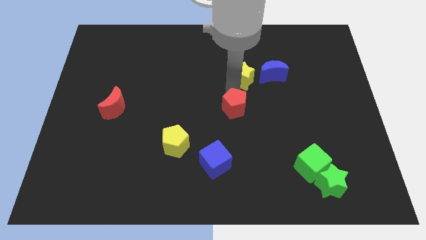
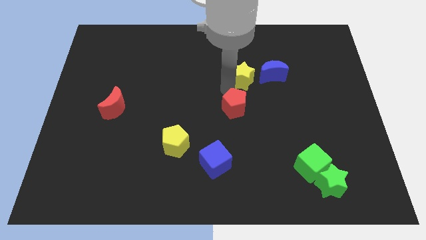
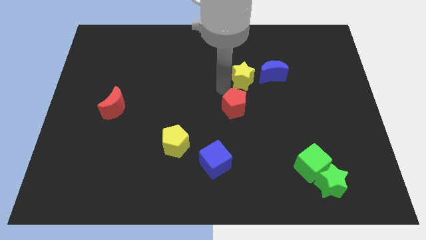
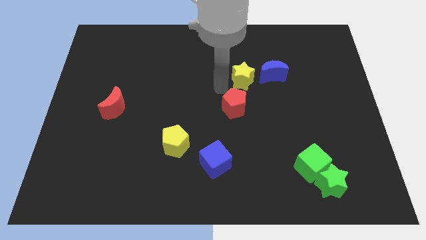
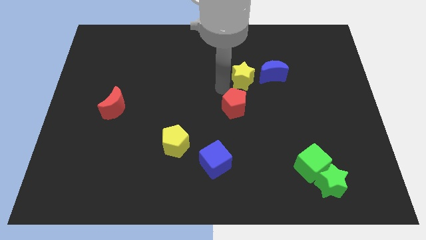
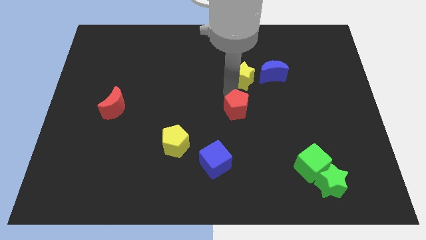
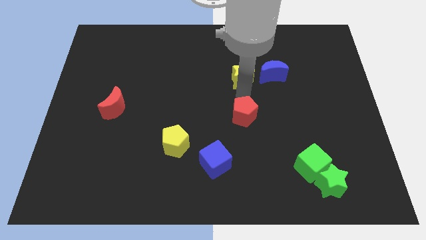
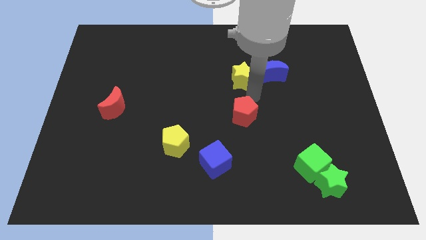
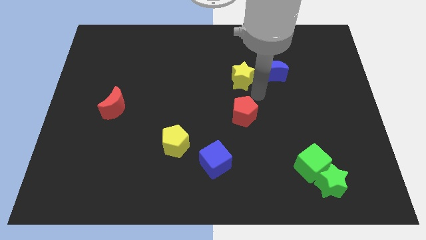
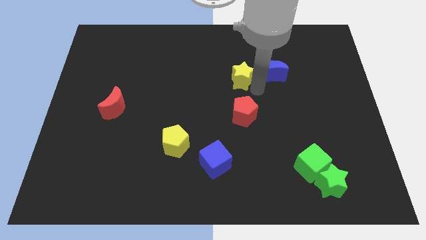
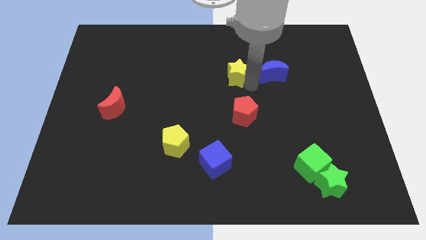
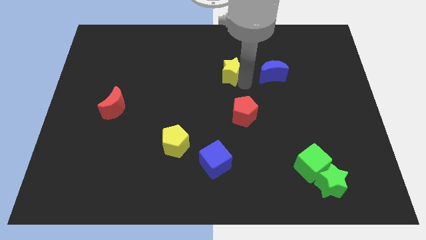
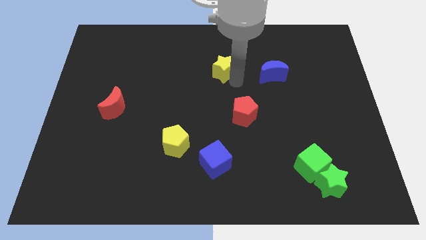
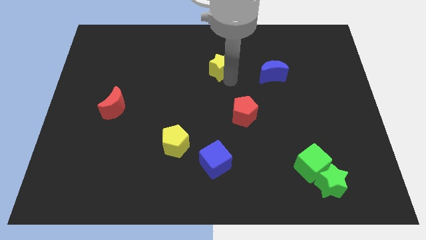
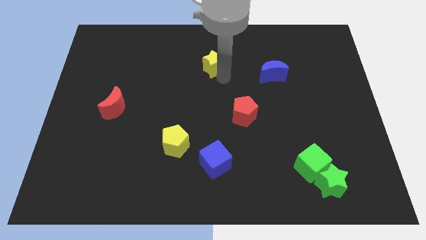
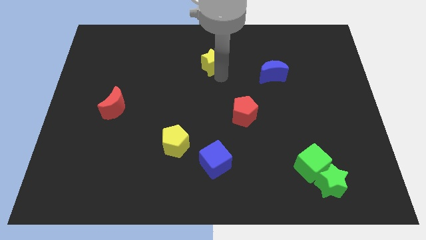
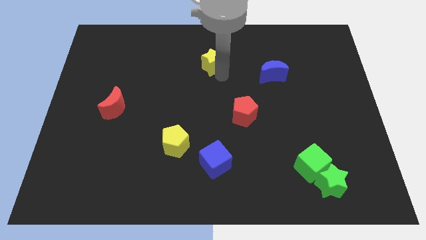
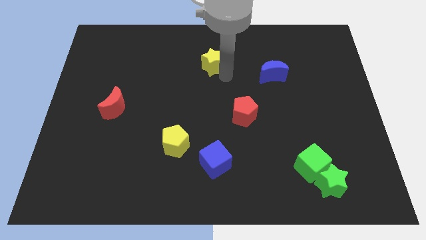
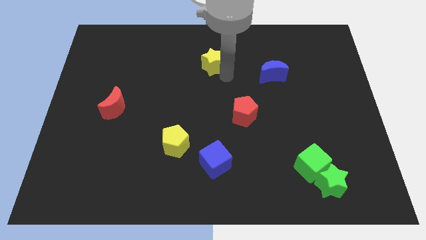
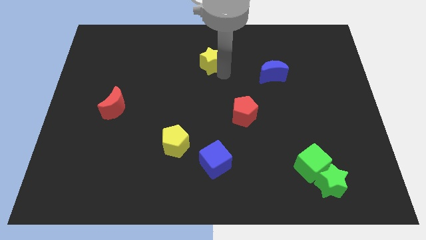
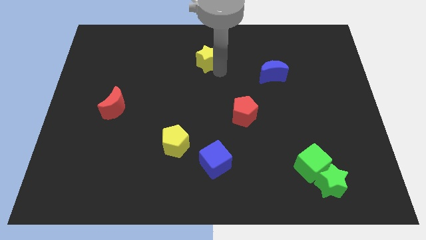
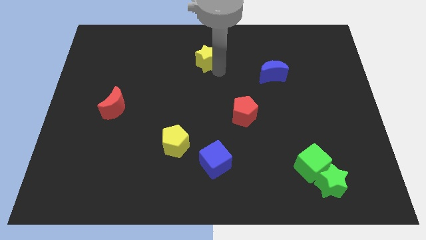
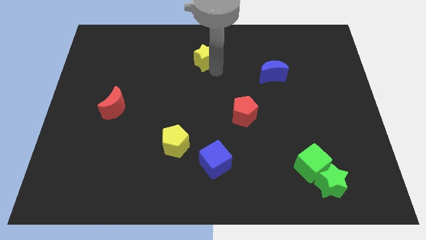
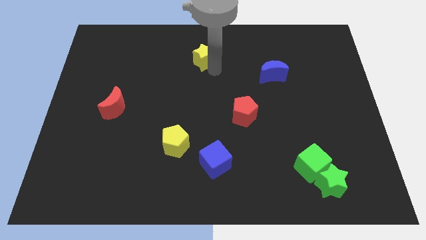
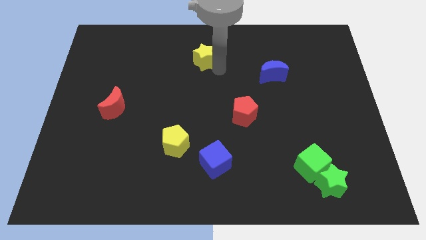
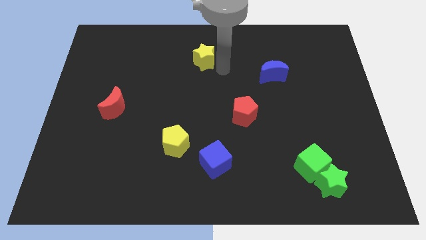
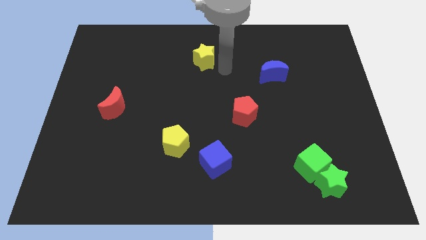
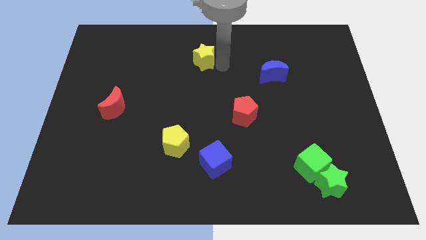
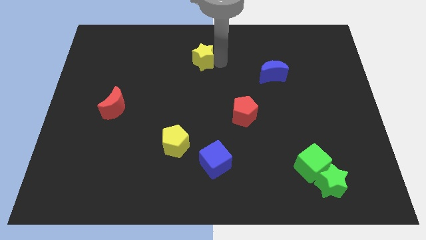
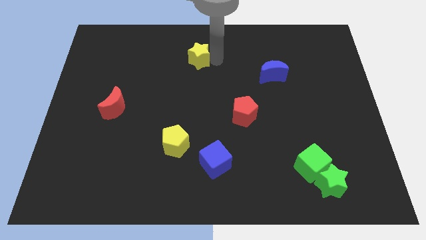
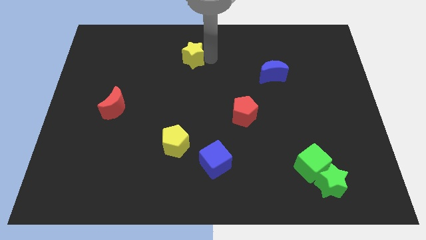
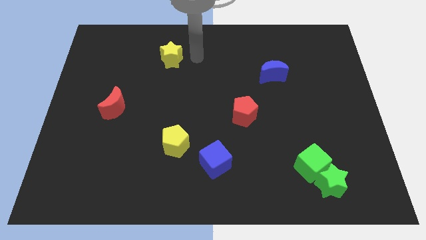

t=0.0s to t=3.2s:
move the yellow star to the vertical top side of the yellow pentagon

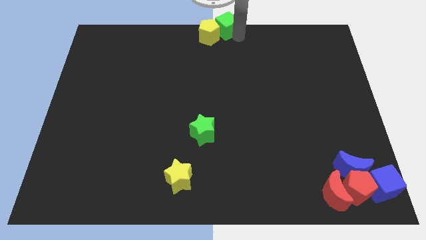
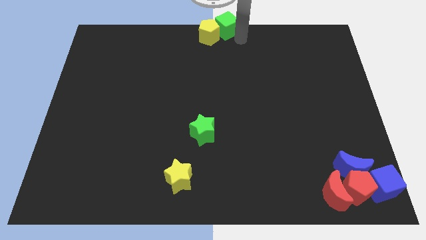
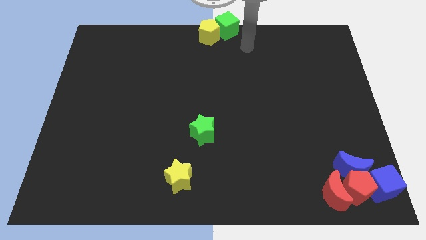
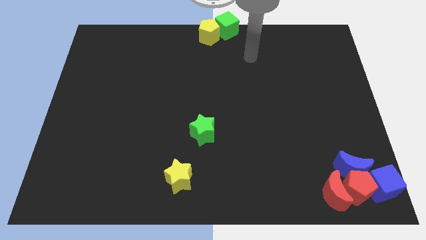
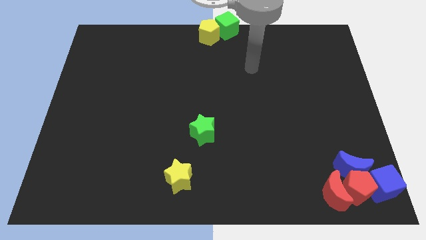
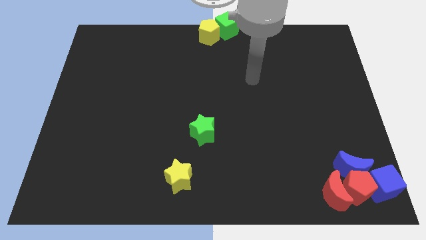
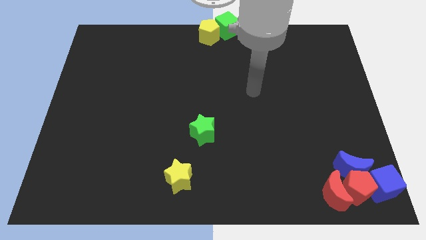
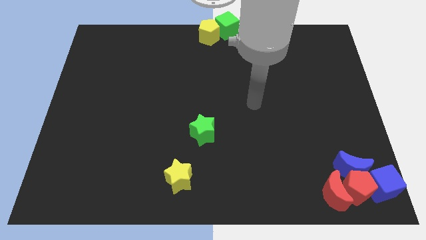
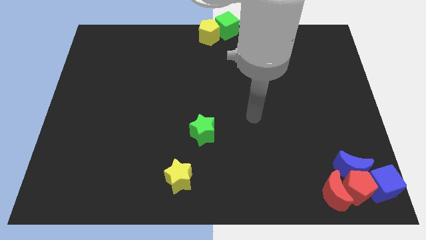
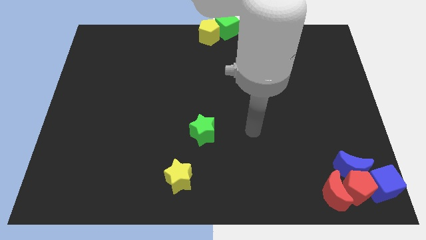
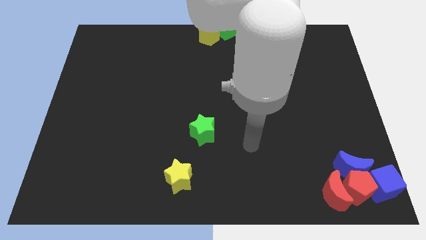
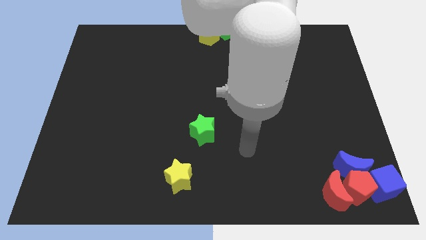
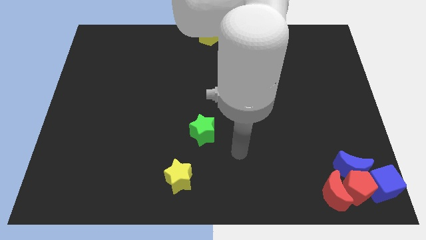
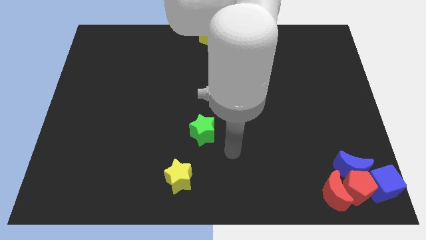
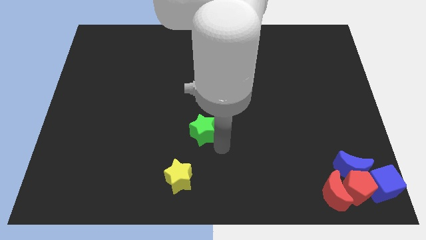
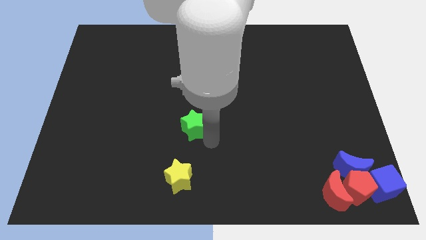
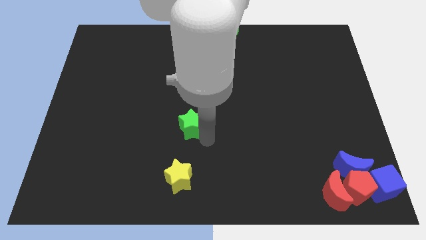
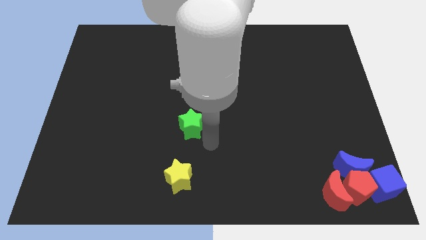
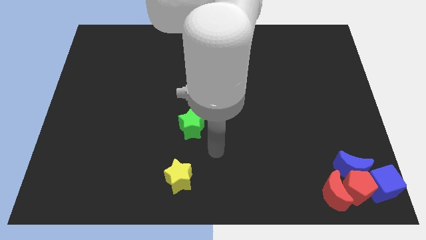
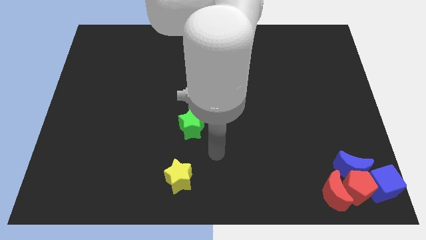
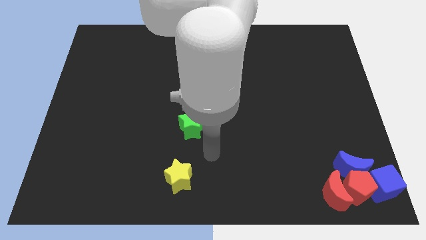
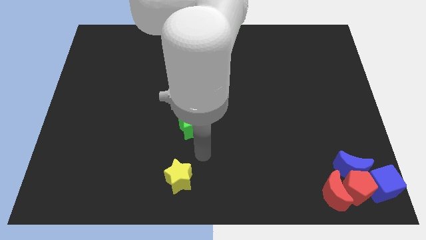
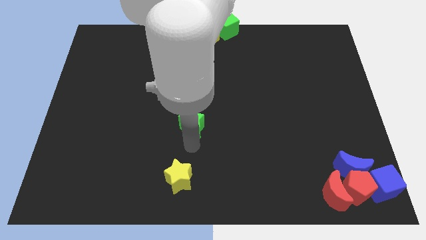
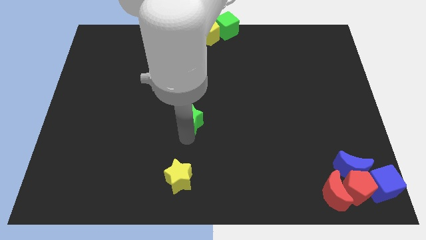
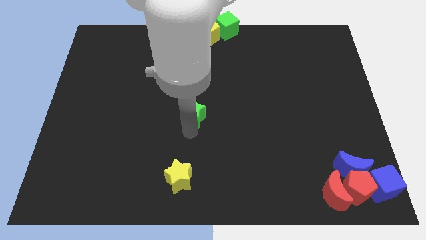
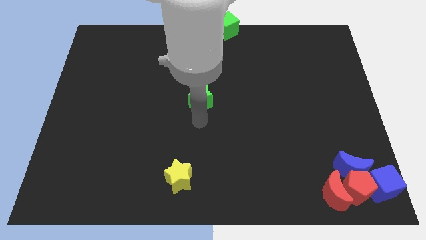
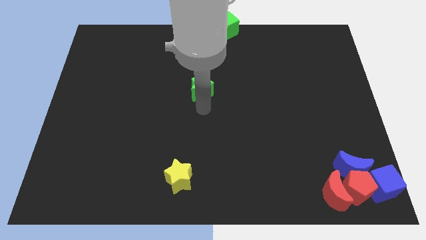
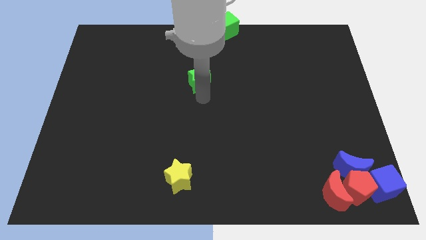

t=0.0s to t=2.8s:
push green star towards middle of the board

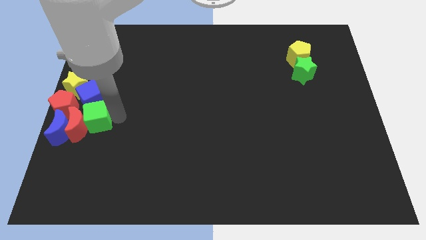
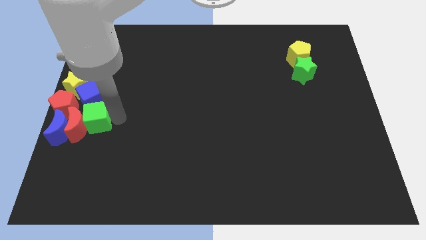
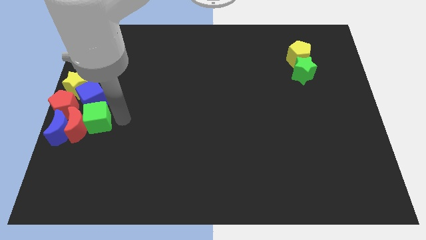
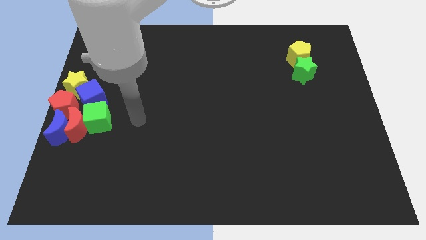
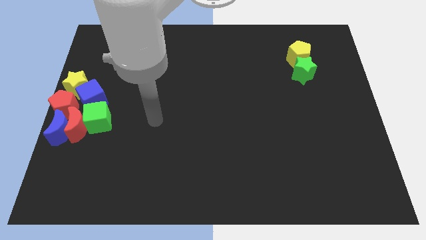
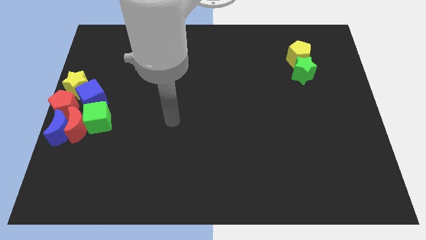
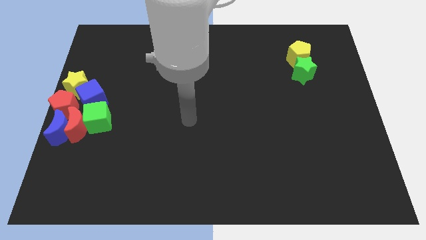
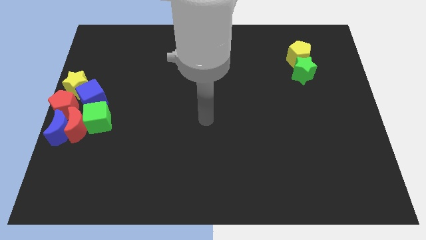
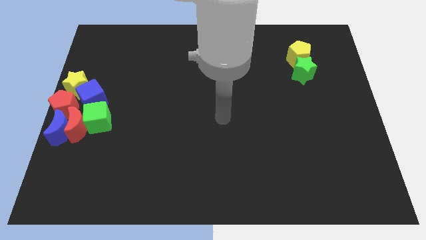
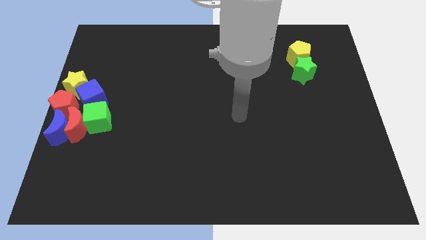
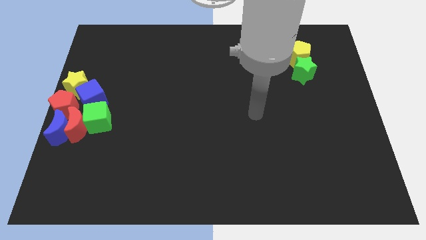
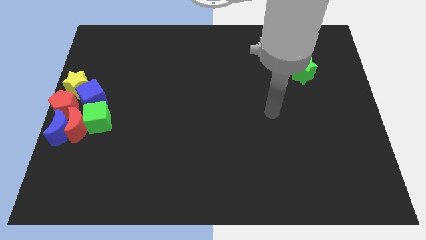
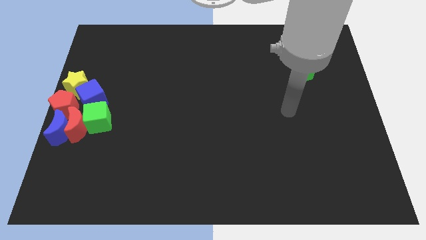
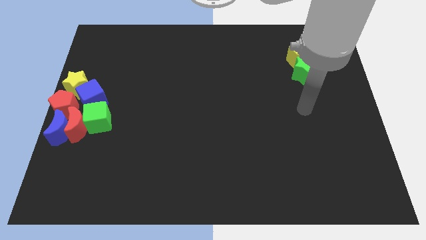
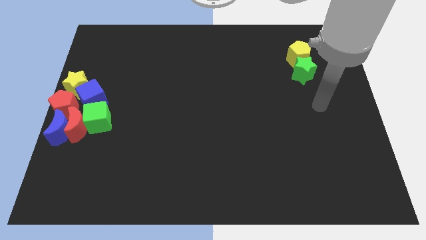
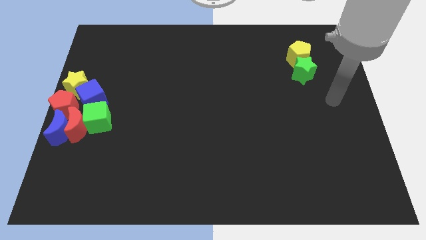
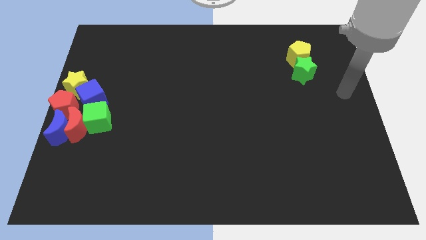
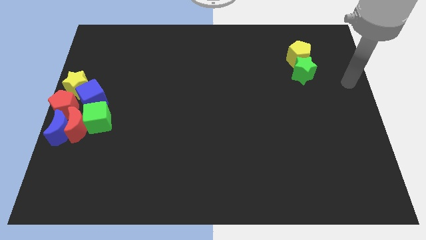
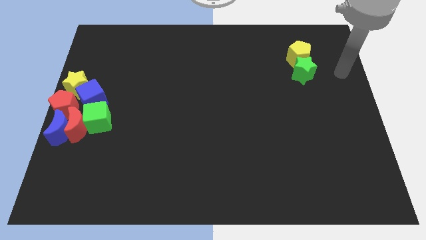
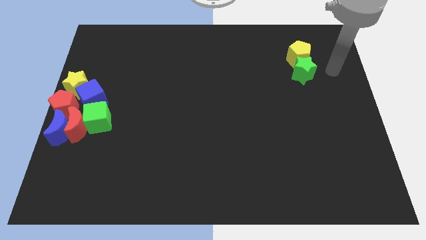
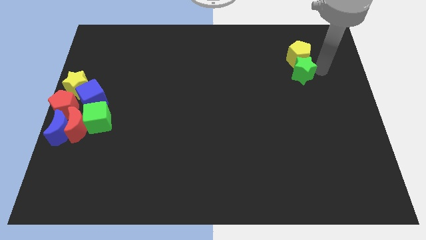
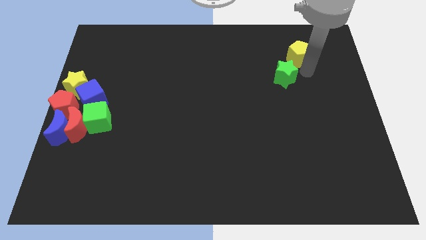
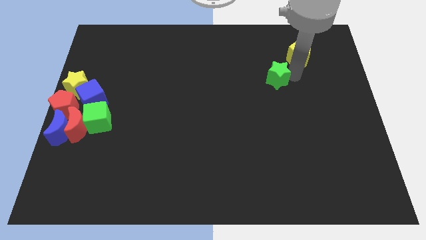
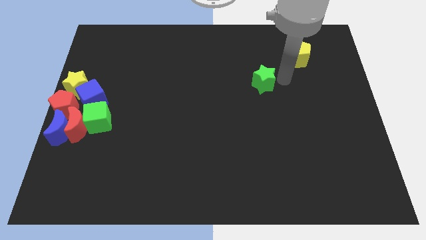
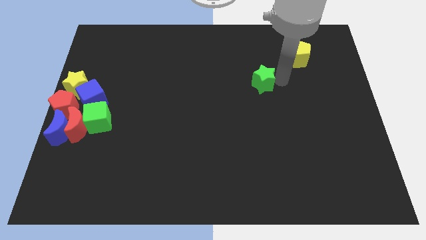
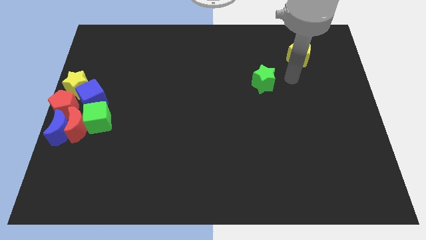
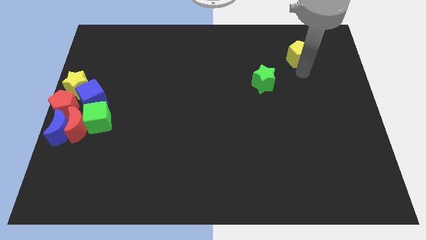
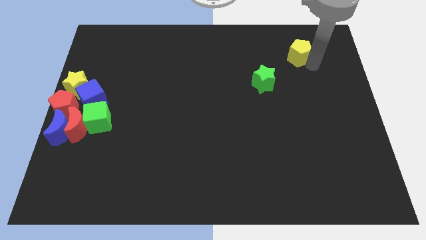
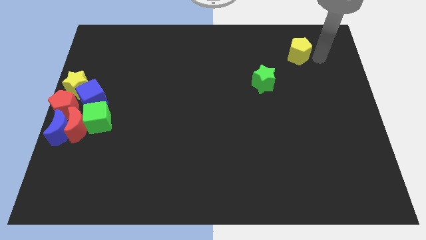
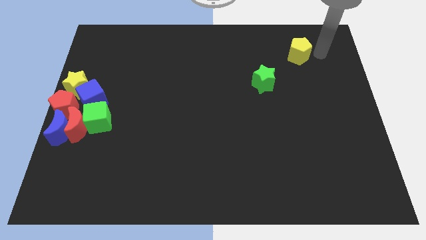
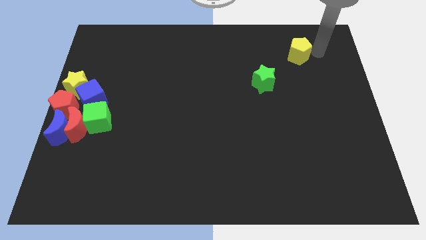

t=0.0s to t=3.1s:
move the green star away from the yellow pentagon
